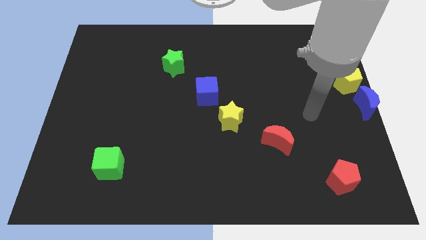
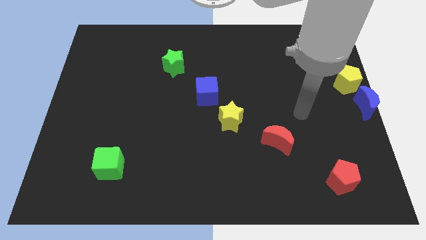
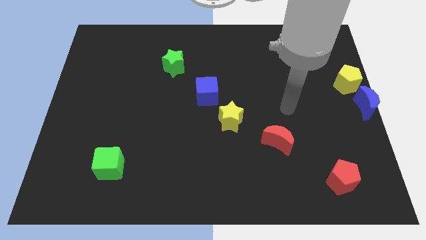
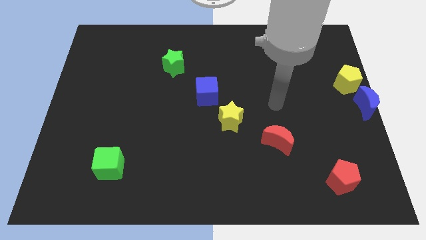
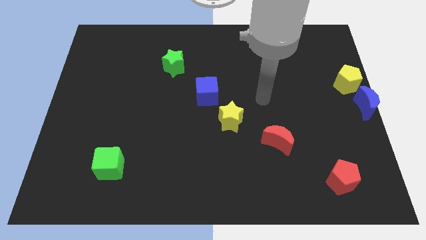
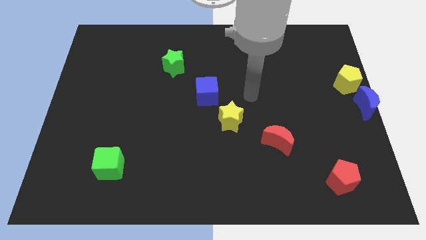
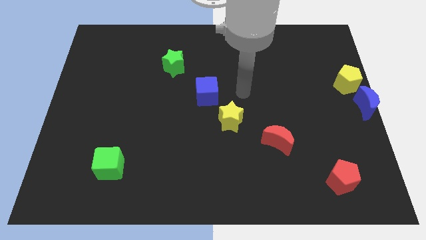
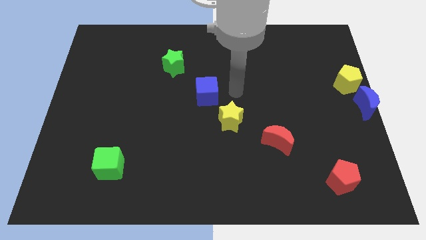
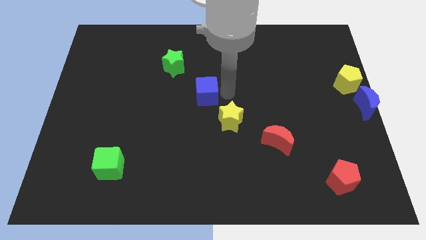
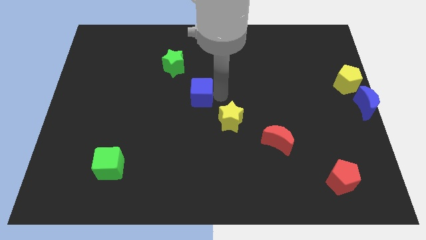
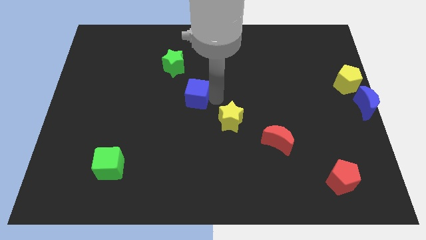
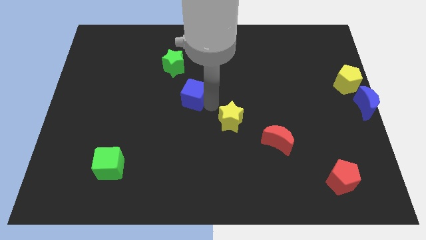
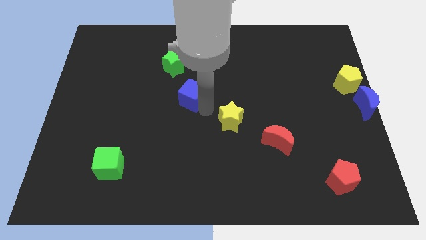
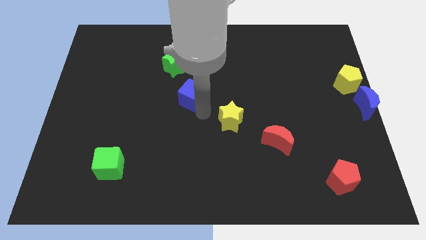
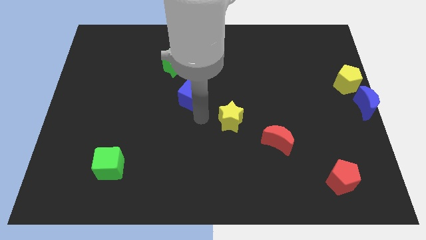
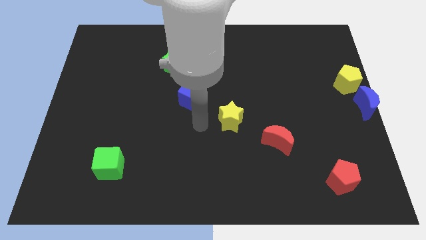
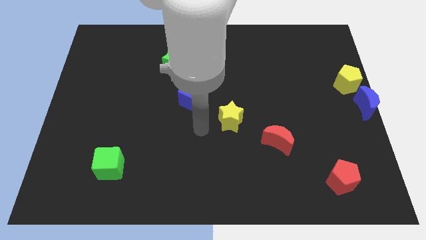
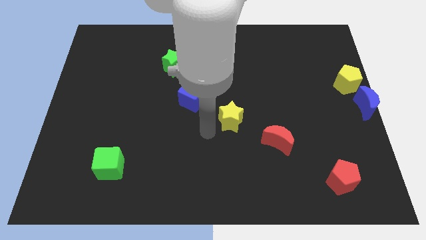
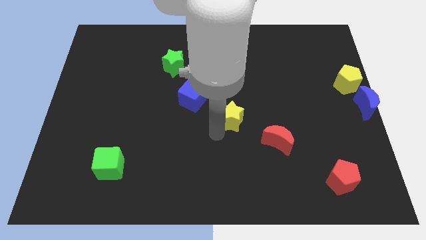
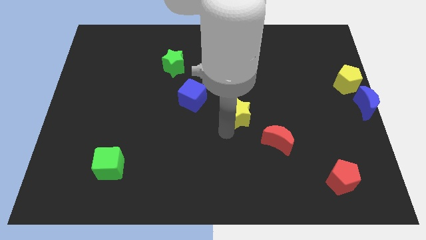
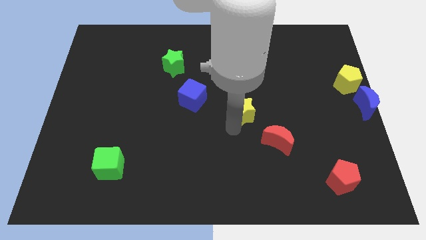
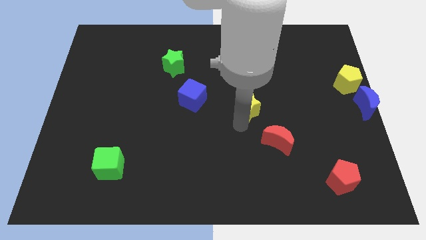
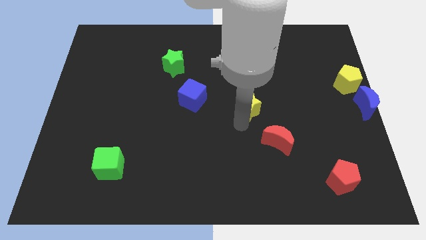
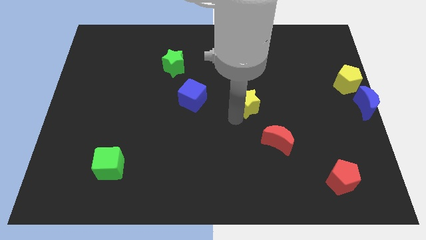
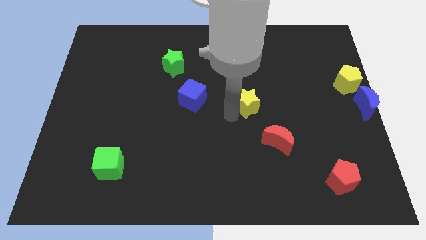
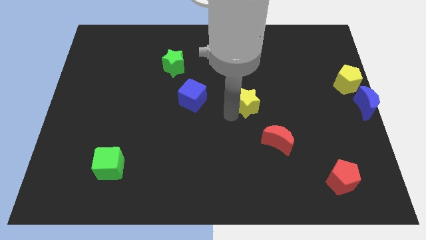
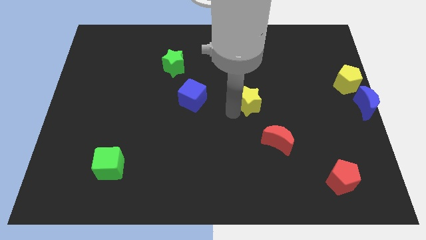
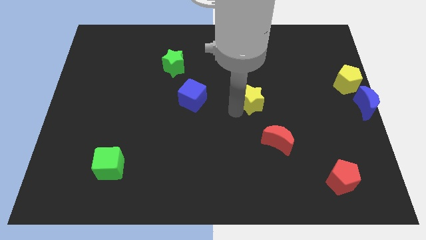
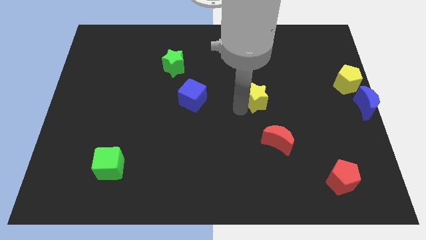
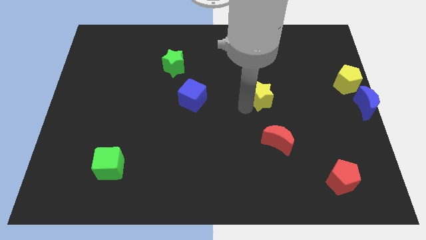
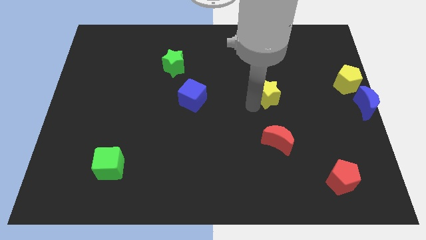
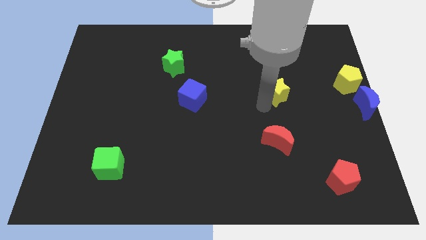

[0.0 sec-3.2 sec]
move the yellow star above the red crescent

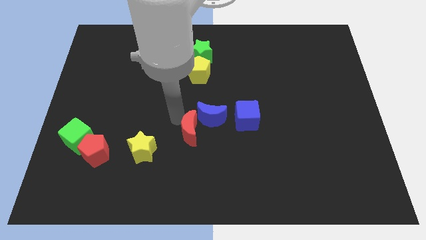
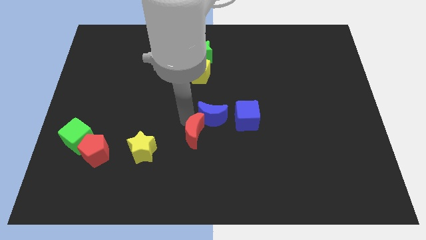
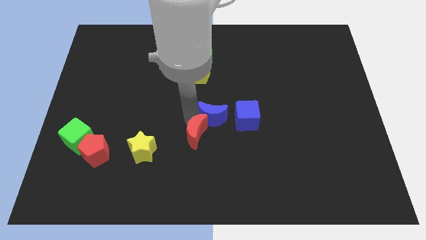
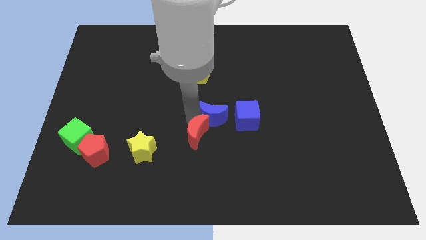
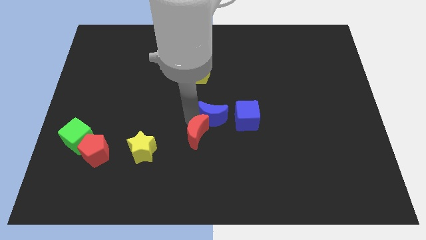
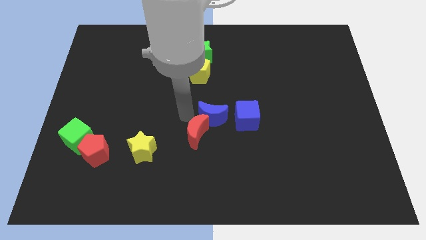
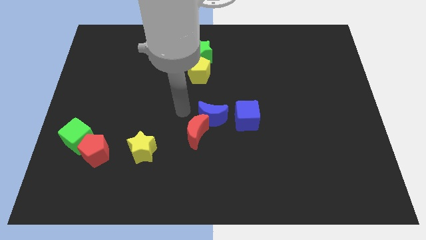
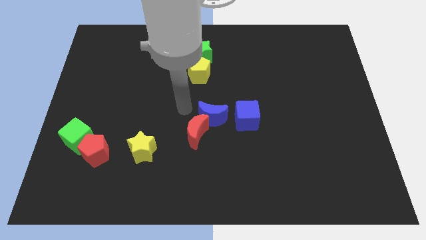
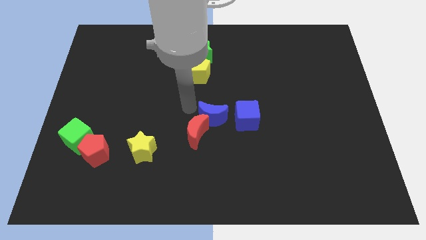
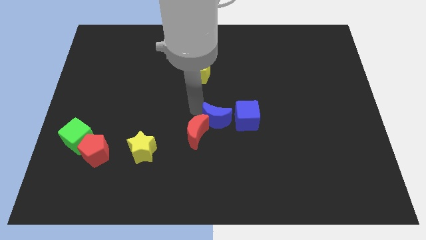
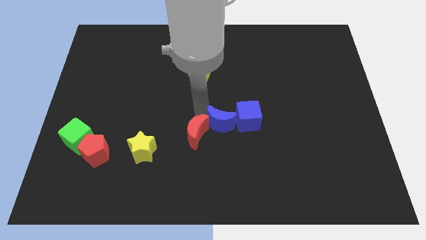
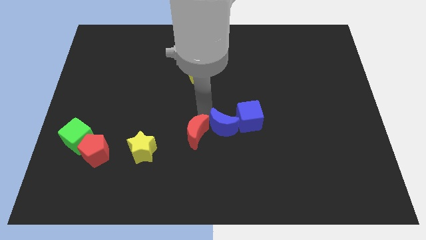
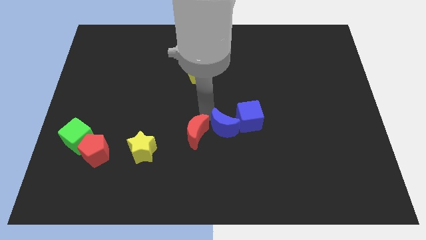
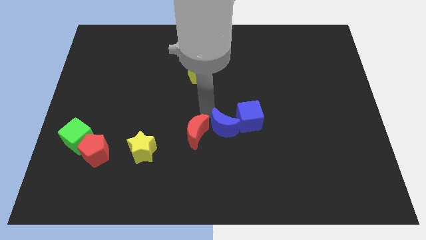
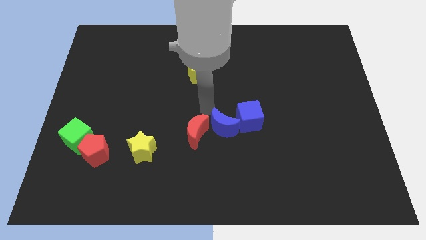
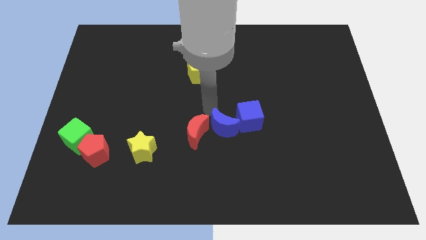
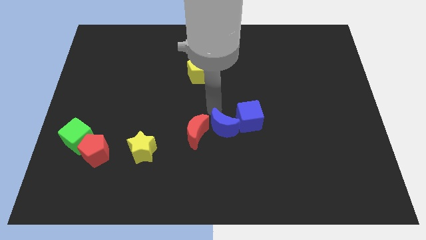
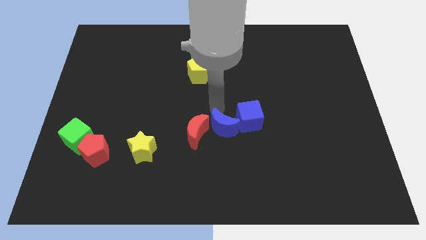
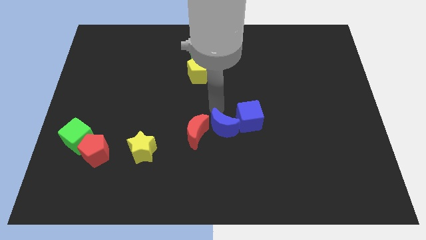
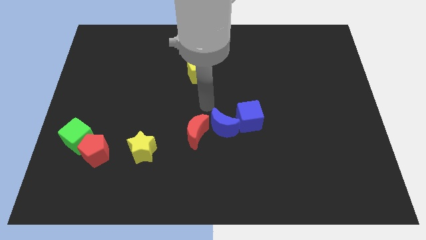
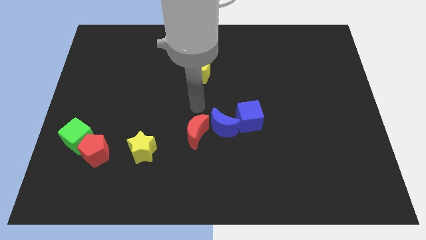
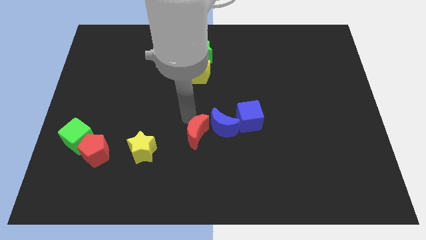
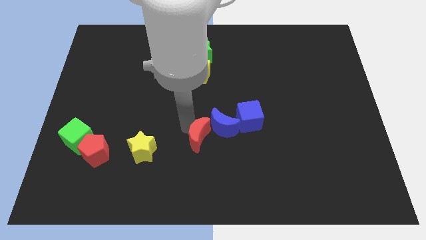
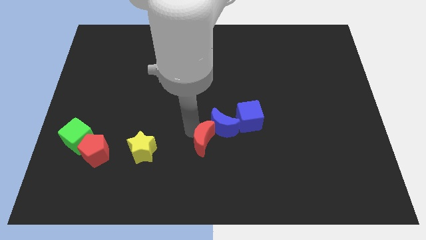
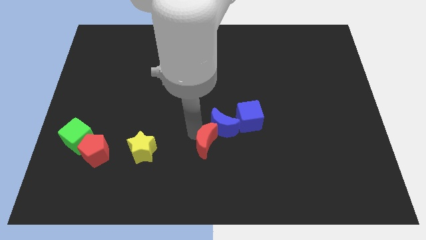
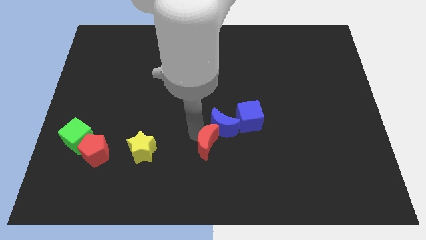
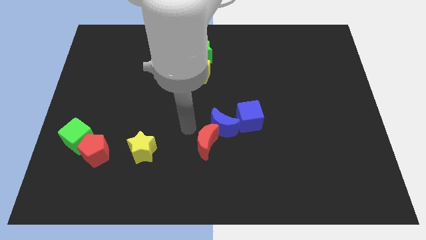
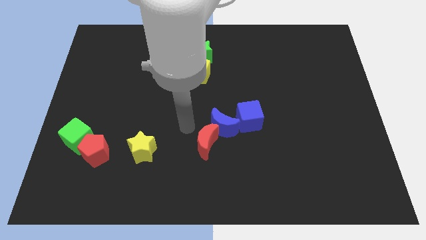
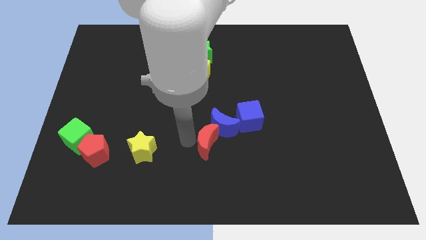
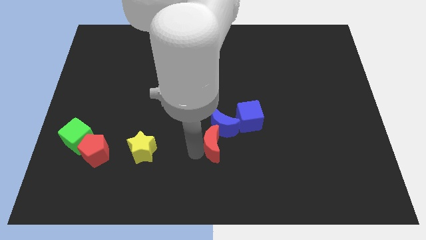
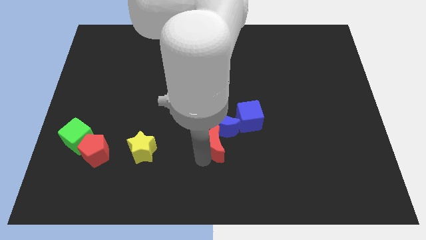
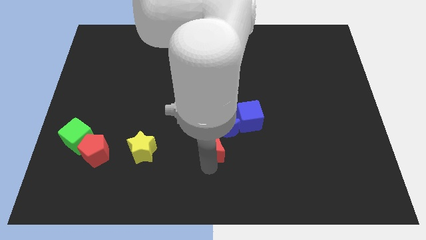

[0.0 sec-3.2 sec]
slightly push the blue moon into the blue cube

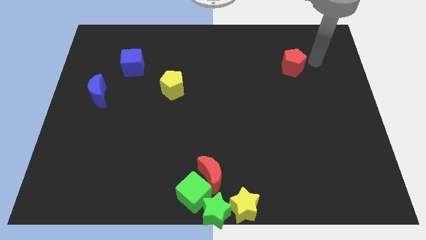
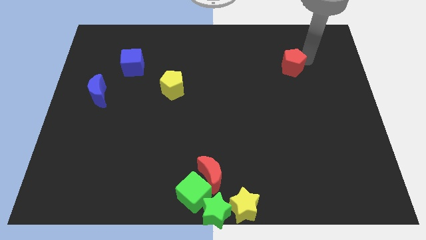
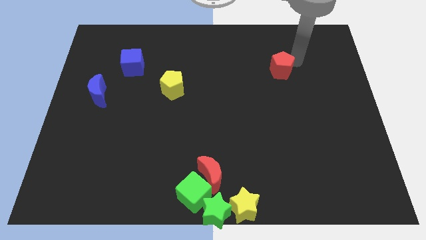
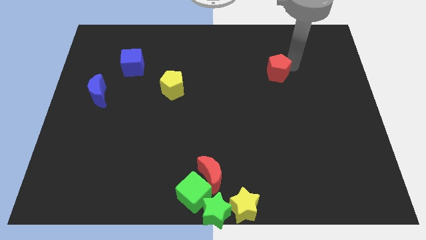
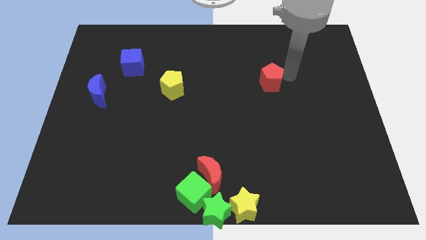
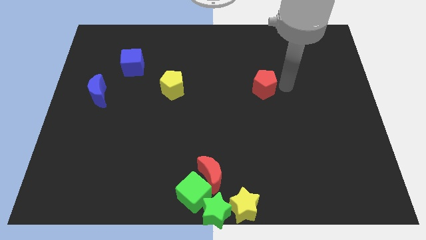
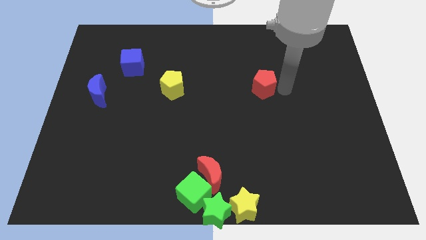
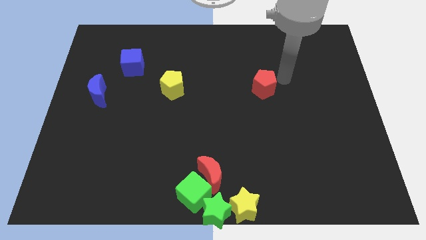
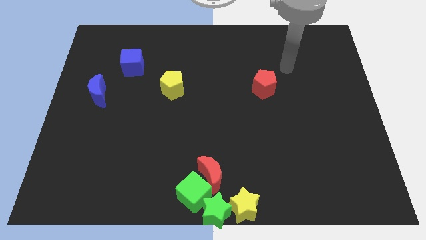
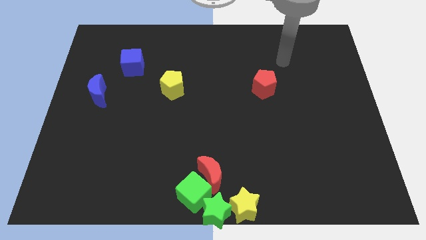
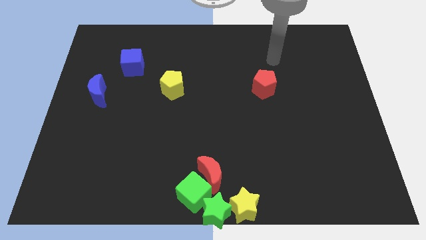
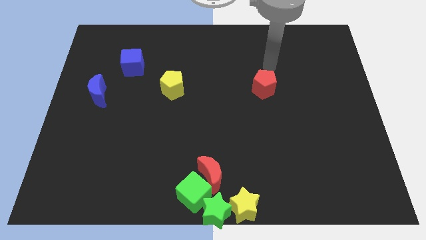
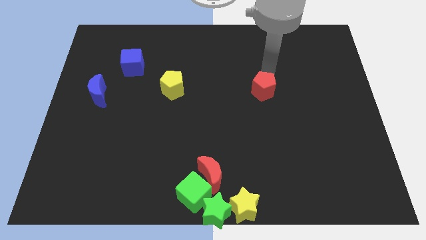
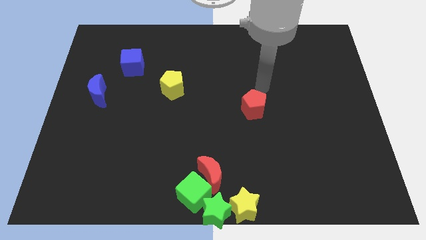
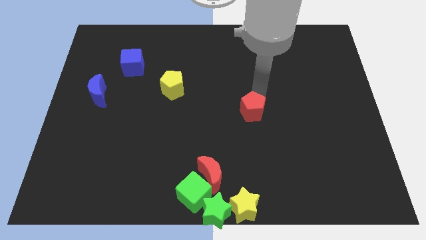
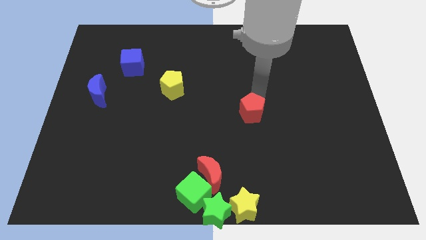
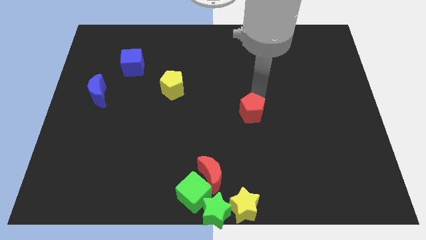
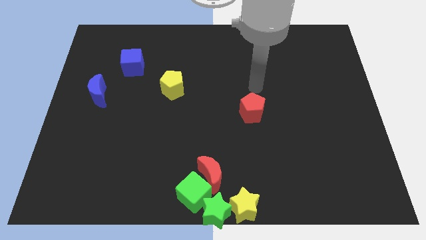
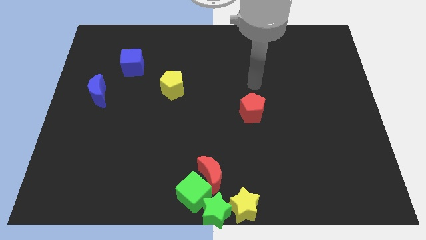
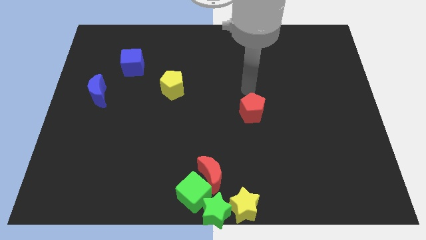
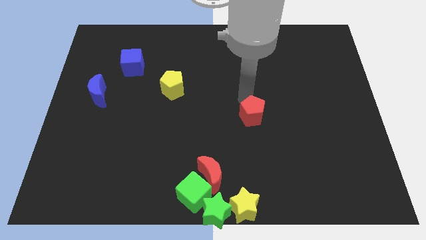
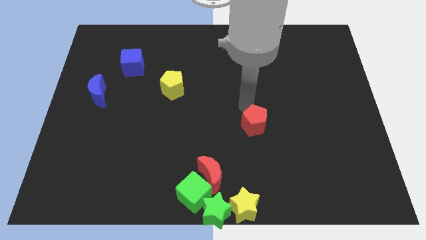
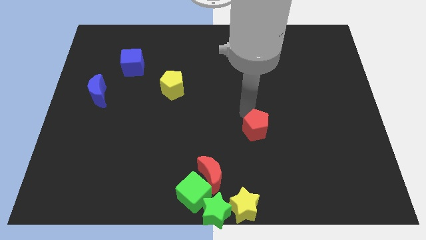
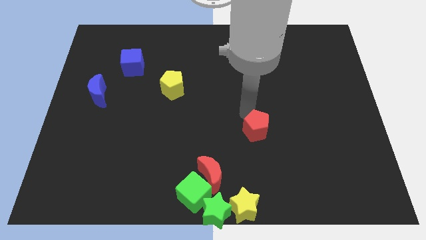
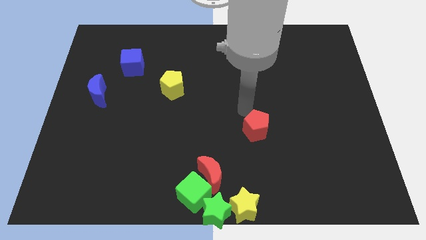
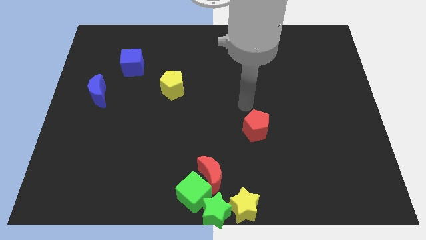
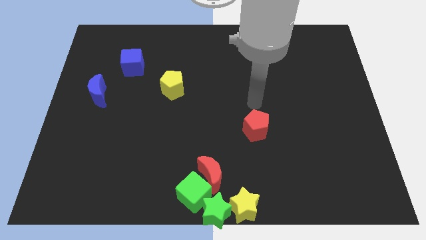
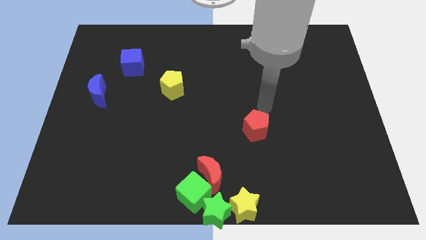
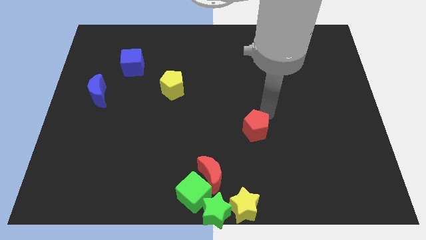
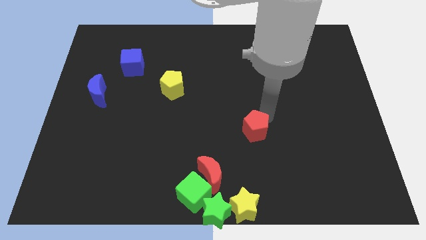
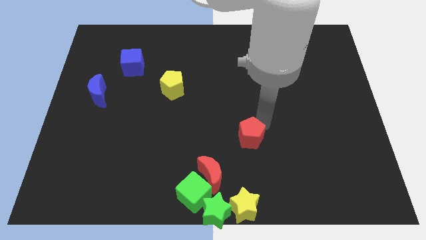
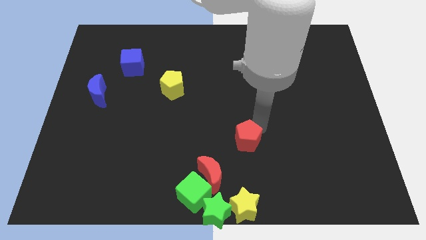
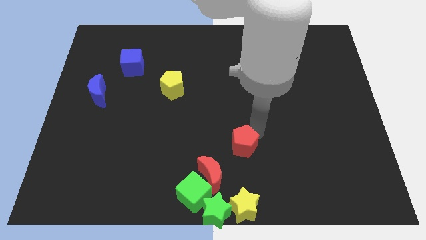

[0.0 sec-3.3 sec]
push the red pentagon to the top right of the red crescent
